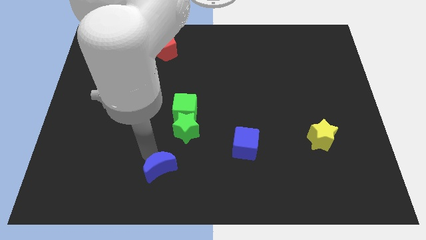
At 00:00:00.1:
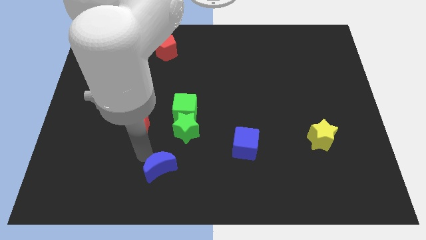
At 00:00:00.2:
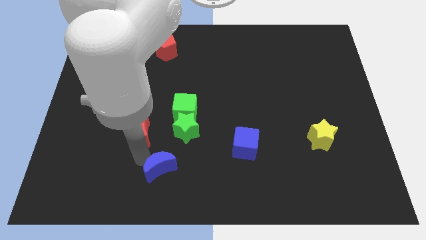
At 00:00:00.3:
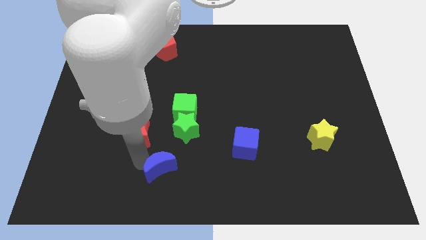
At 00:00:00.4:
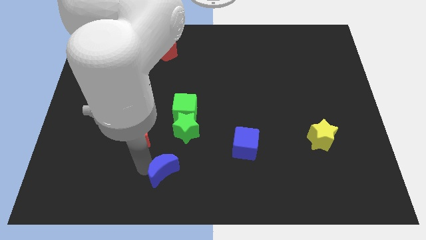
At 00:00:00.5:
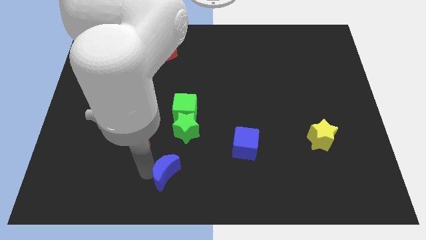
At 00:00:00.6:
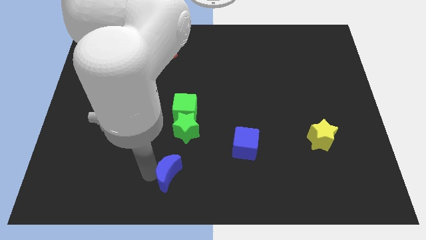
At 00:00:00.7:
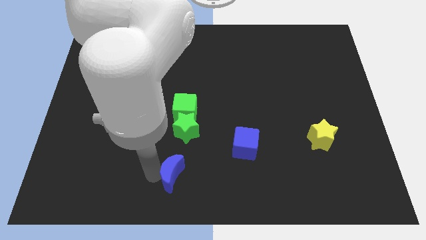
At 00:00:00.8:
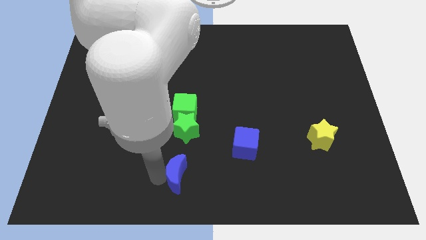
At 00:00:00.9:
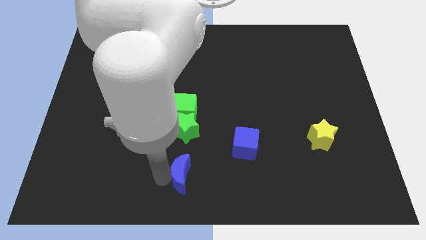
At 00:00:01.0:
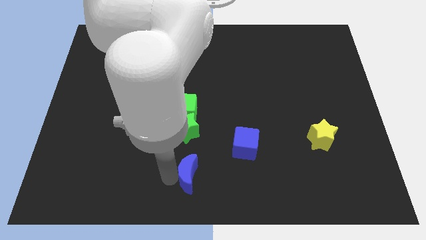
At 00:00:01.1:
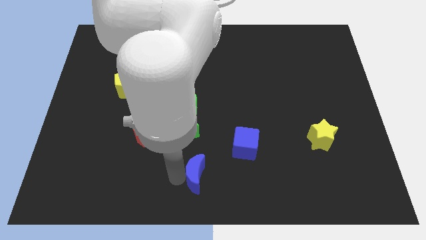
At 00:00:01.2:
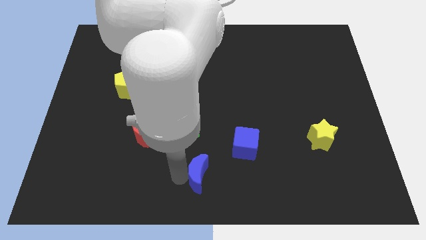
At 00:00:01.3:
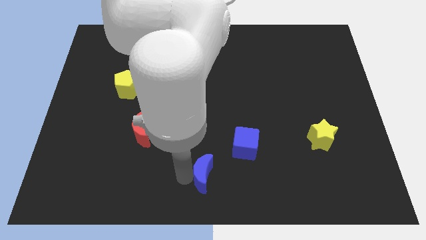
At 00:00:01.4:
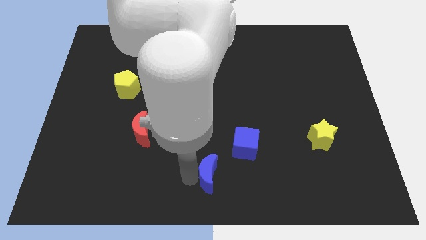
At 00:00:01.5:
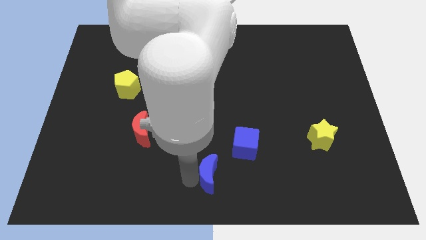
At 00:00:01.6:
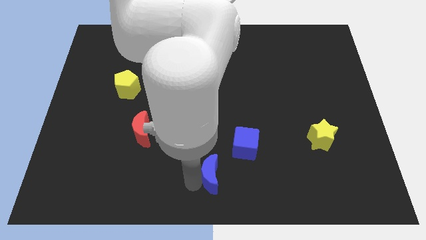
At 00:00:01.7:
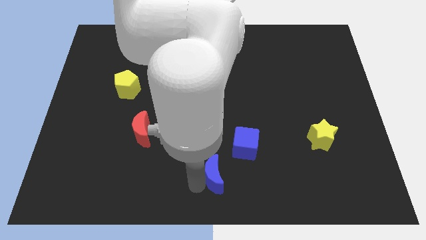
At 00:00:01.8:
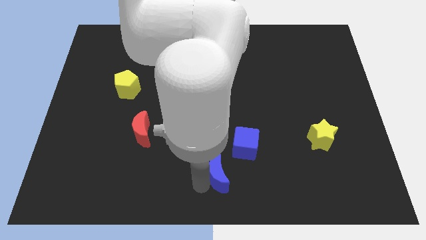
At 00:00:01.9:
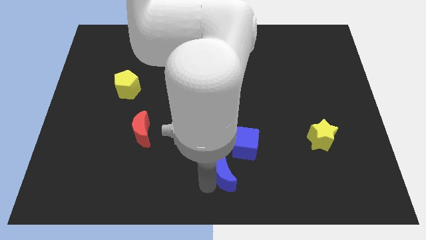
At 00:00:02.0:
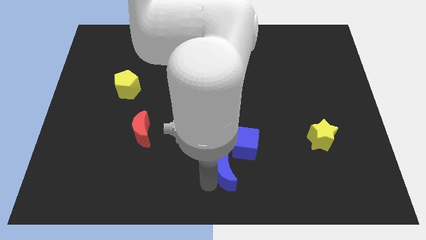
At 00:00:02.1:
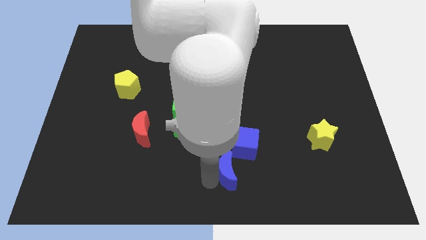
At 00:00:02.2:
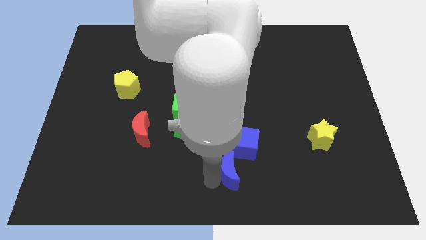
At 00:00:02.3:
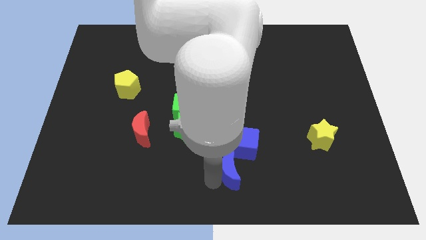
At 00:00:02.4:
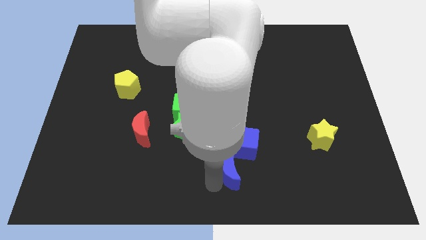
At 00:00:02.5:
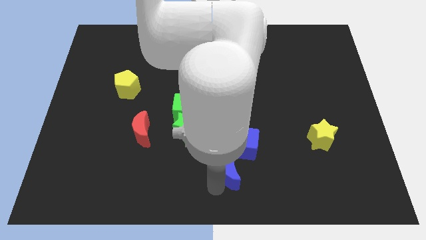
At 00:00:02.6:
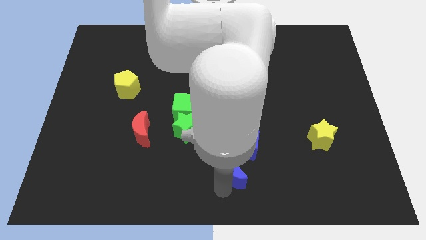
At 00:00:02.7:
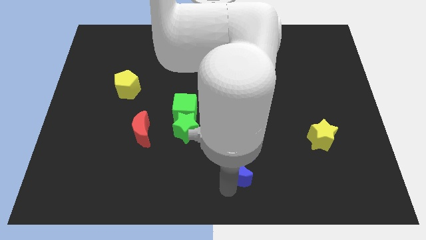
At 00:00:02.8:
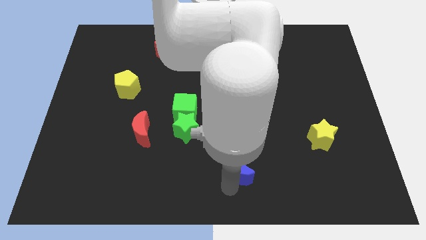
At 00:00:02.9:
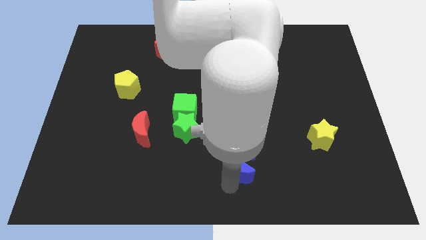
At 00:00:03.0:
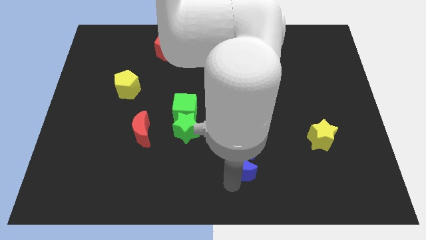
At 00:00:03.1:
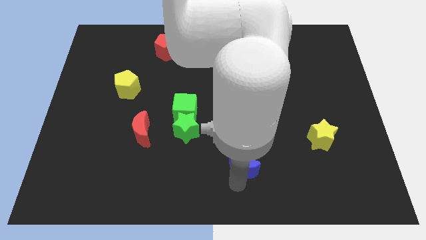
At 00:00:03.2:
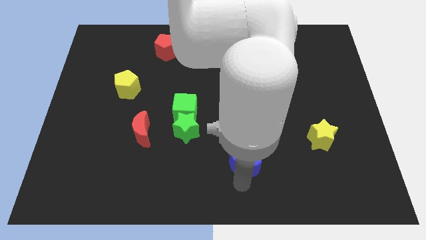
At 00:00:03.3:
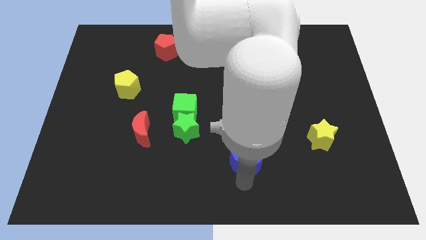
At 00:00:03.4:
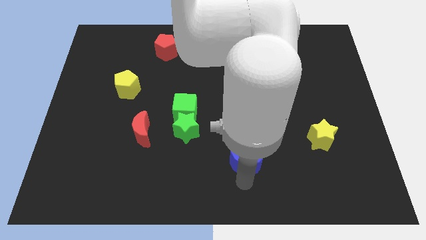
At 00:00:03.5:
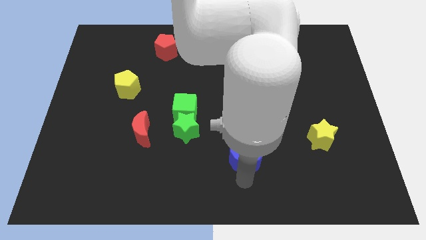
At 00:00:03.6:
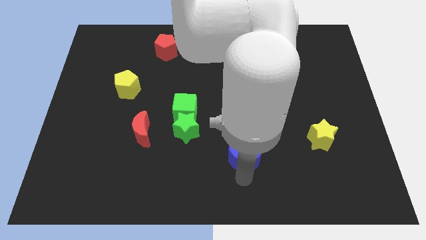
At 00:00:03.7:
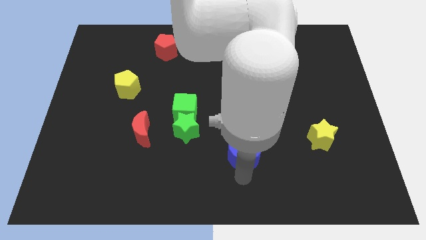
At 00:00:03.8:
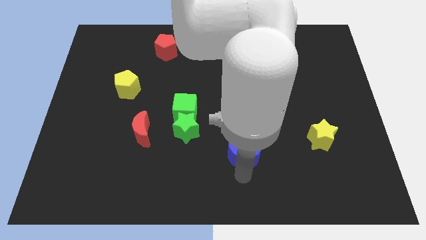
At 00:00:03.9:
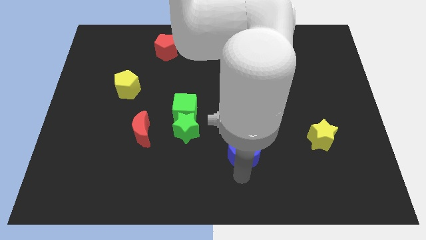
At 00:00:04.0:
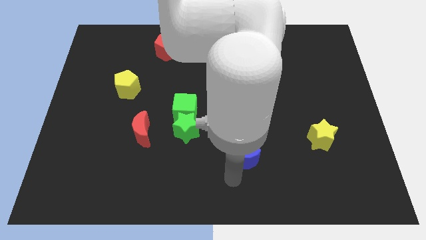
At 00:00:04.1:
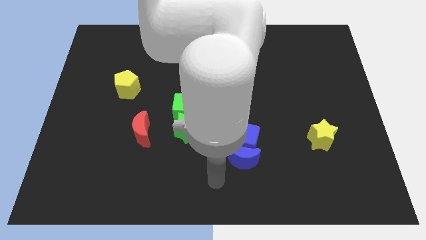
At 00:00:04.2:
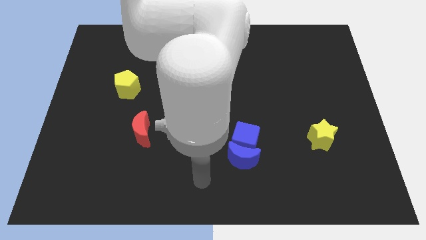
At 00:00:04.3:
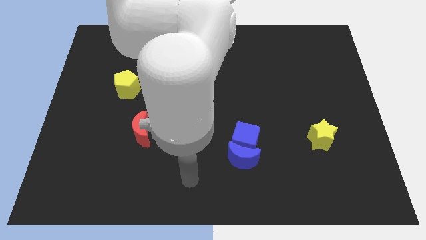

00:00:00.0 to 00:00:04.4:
place blue crescent below blue cube

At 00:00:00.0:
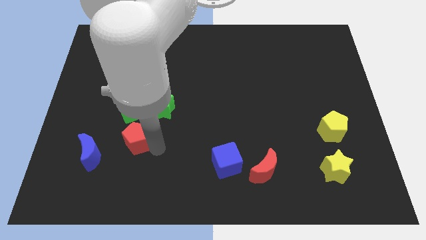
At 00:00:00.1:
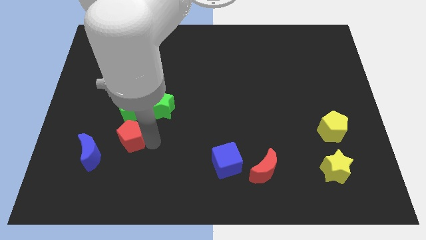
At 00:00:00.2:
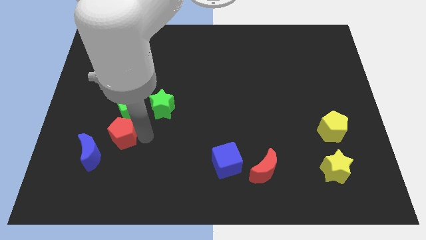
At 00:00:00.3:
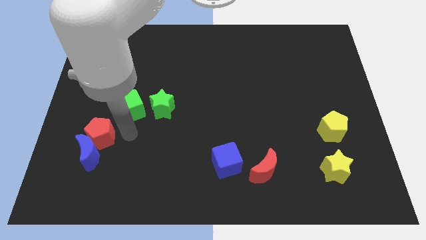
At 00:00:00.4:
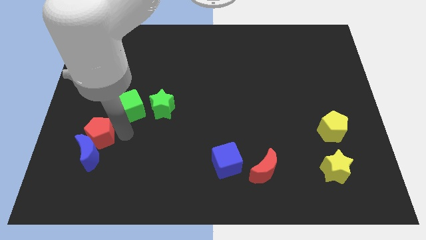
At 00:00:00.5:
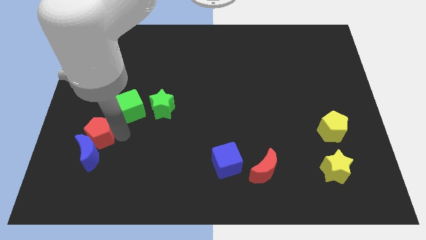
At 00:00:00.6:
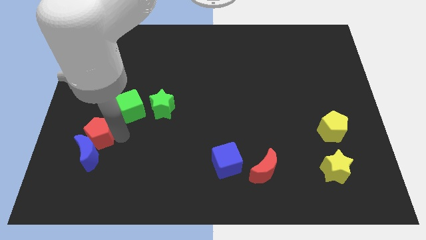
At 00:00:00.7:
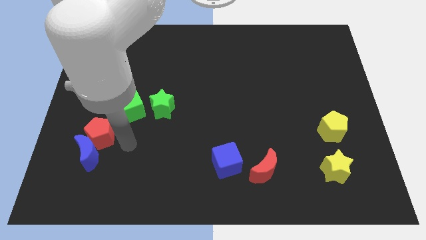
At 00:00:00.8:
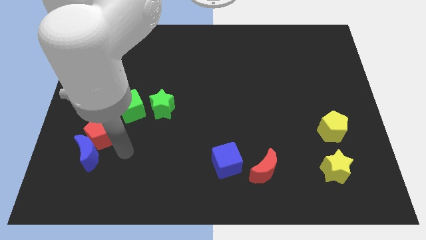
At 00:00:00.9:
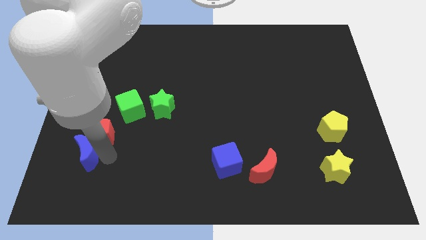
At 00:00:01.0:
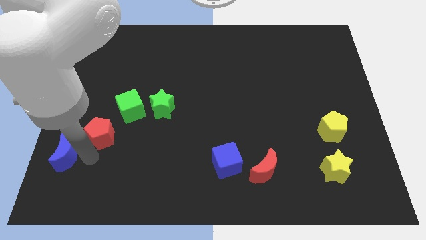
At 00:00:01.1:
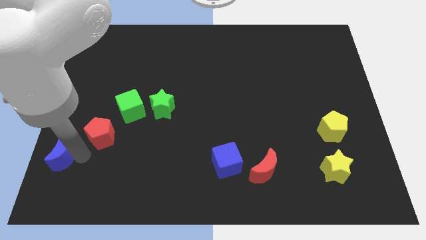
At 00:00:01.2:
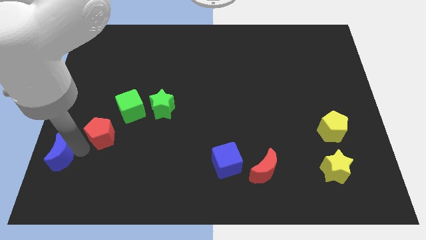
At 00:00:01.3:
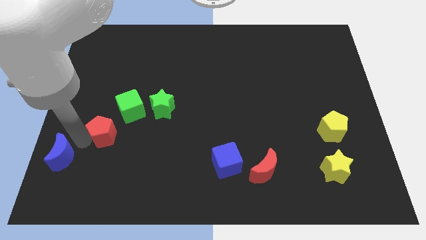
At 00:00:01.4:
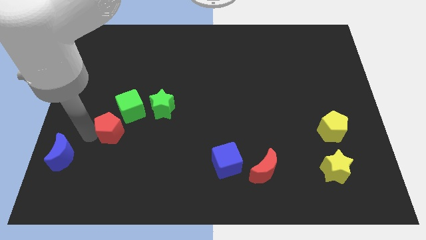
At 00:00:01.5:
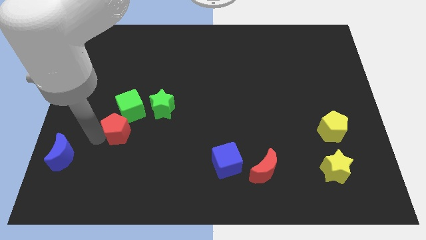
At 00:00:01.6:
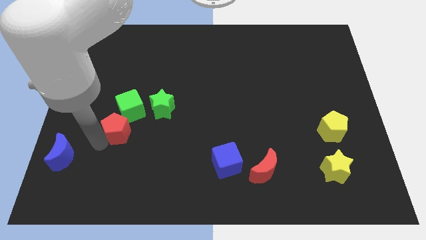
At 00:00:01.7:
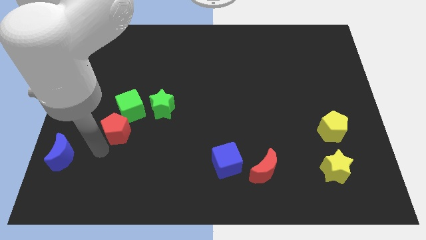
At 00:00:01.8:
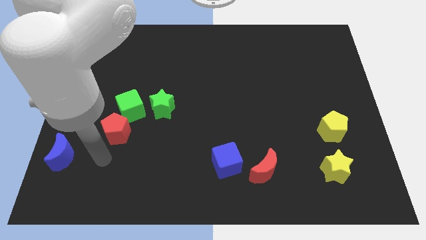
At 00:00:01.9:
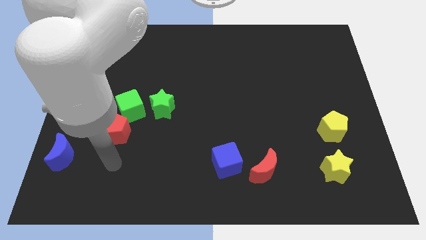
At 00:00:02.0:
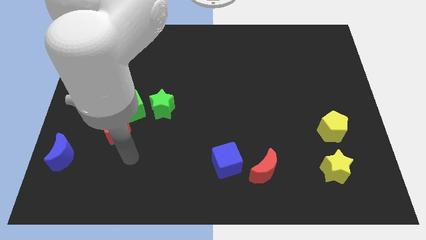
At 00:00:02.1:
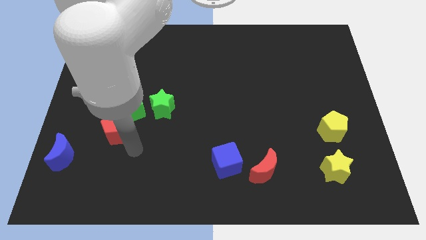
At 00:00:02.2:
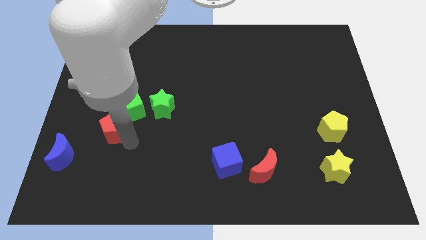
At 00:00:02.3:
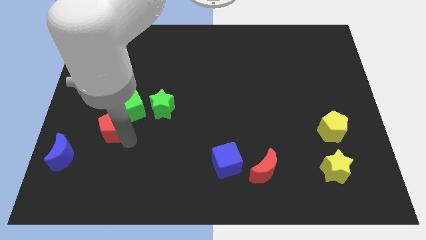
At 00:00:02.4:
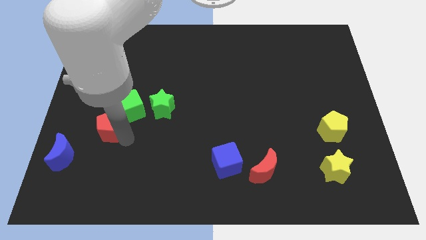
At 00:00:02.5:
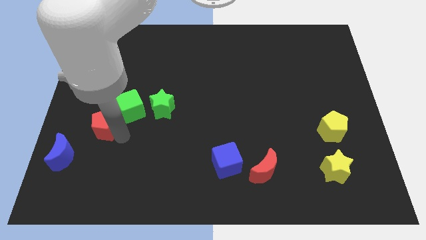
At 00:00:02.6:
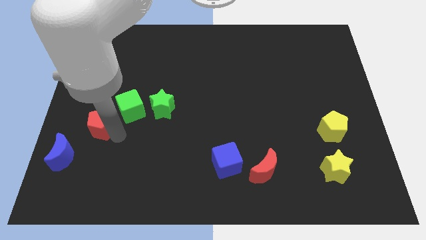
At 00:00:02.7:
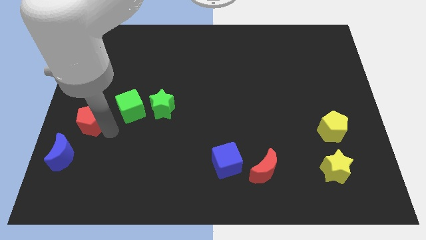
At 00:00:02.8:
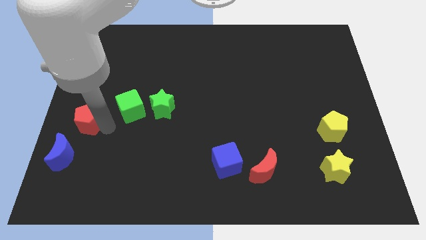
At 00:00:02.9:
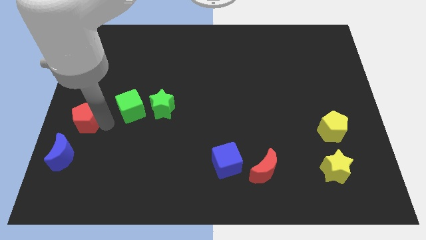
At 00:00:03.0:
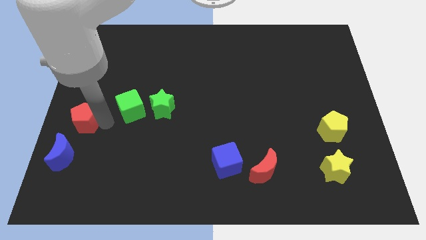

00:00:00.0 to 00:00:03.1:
push the red pentagon towards center left

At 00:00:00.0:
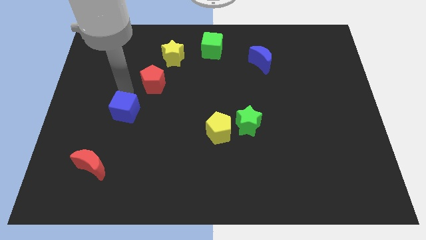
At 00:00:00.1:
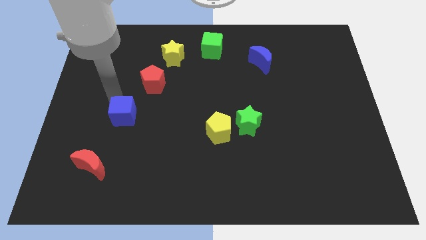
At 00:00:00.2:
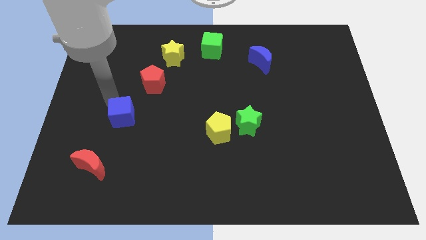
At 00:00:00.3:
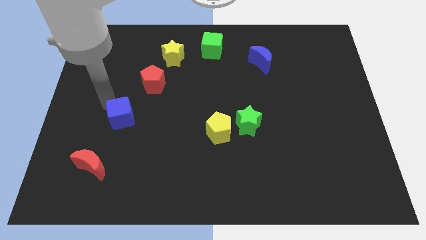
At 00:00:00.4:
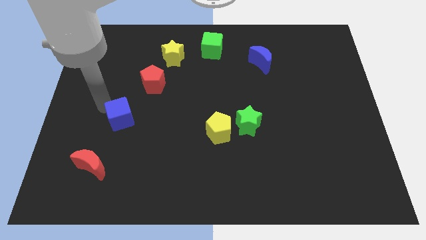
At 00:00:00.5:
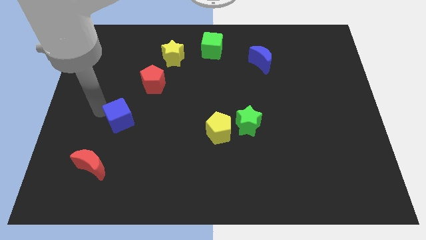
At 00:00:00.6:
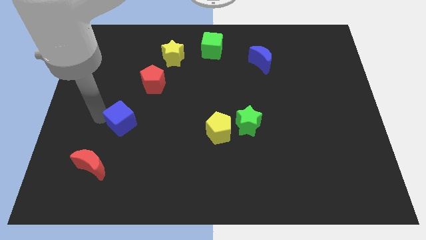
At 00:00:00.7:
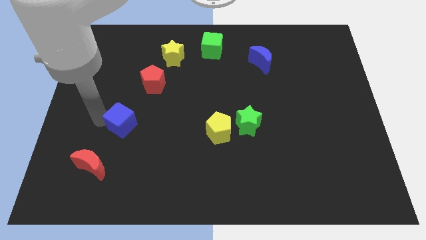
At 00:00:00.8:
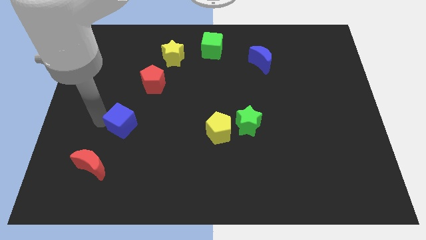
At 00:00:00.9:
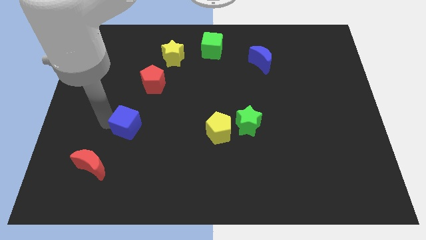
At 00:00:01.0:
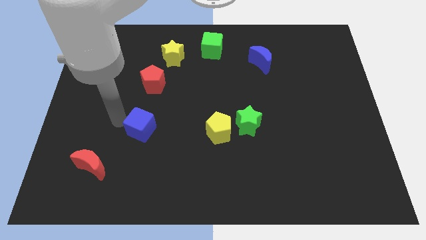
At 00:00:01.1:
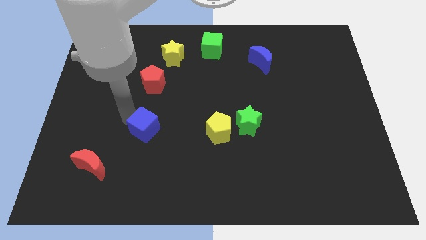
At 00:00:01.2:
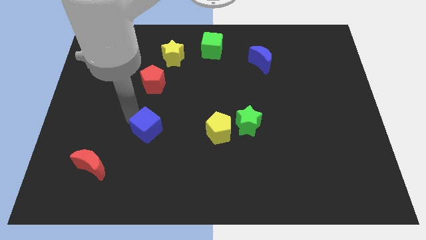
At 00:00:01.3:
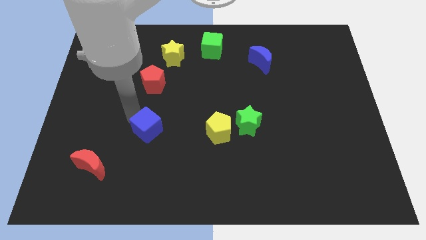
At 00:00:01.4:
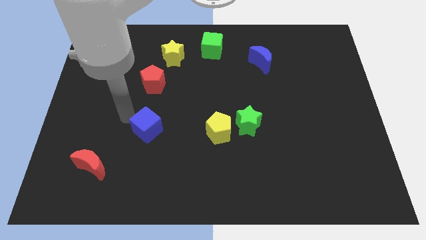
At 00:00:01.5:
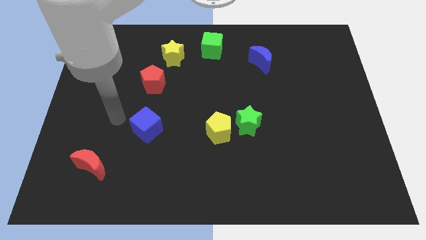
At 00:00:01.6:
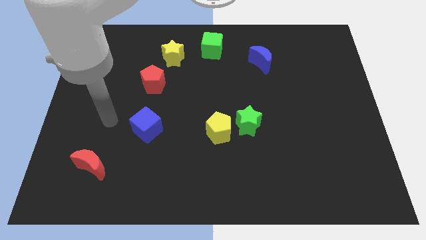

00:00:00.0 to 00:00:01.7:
put the blue cube vertically below the red pentagon
